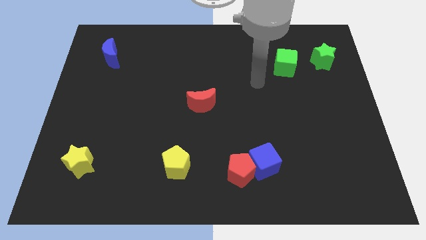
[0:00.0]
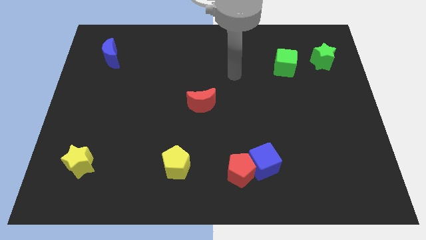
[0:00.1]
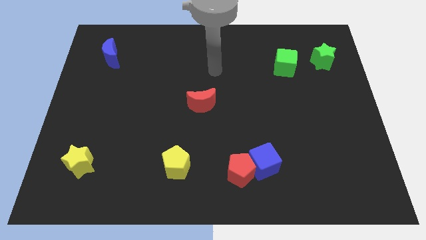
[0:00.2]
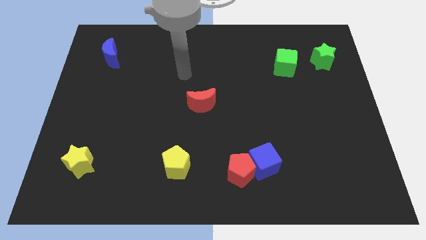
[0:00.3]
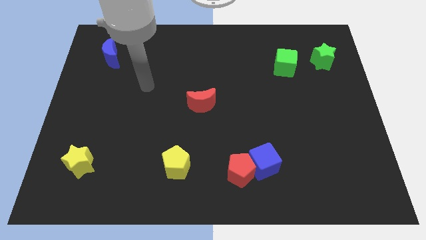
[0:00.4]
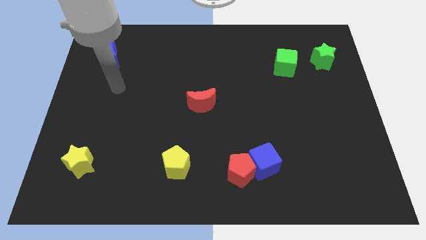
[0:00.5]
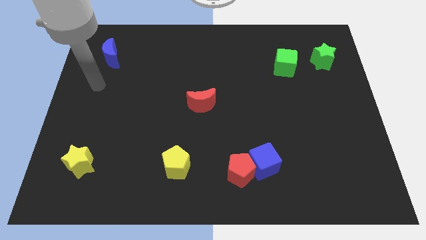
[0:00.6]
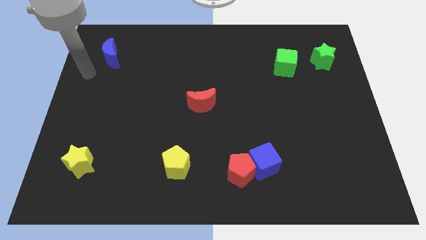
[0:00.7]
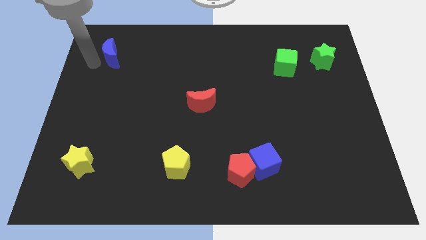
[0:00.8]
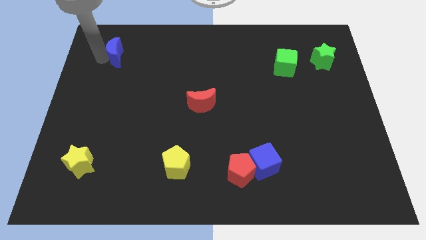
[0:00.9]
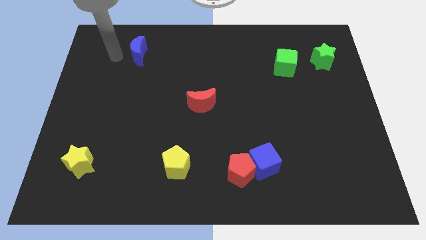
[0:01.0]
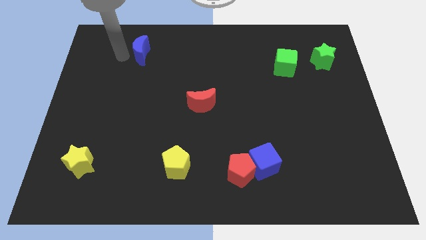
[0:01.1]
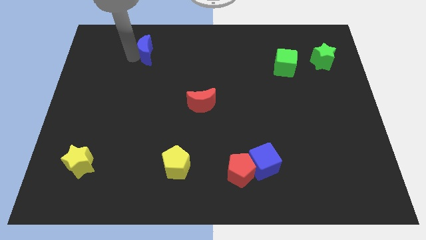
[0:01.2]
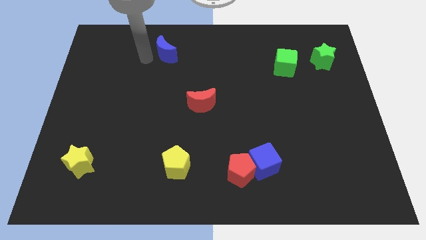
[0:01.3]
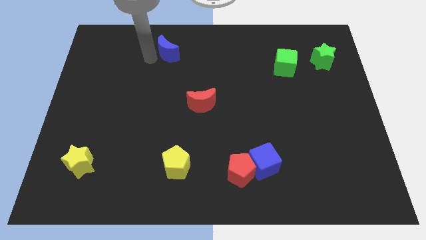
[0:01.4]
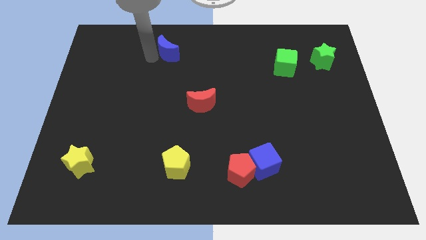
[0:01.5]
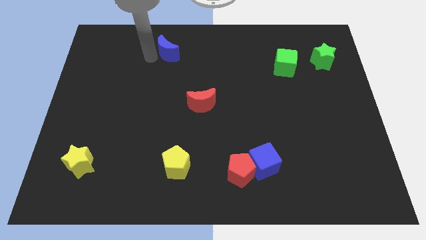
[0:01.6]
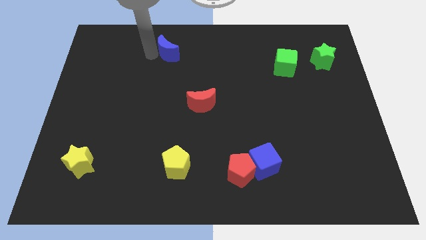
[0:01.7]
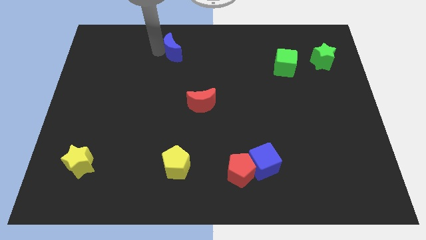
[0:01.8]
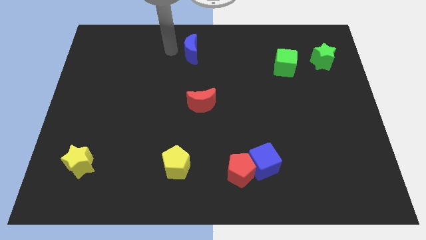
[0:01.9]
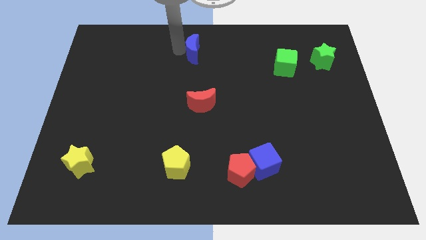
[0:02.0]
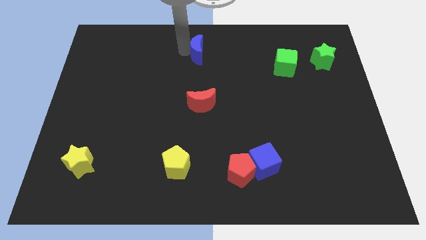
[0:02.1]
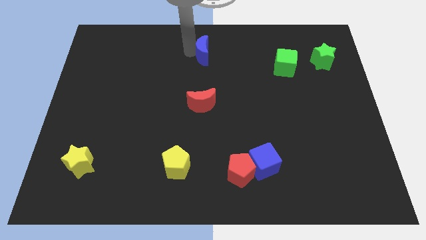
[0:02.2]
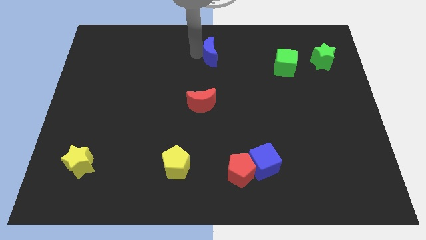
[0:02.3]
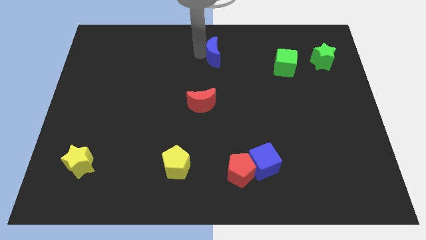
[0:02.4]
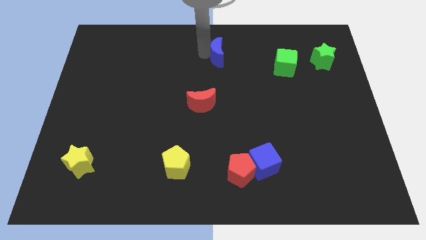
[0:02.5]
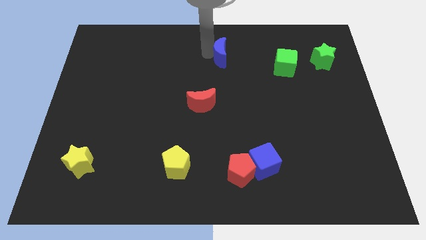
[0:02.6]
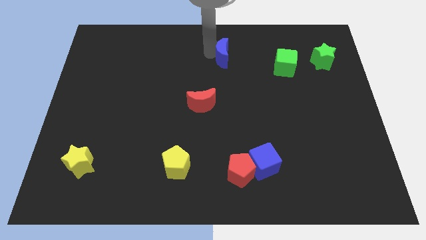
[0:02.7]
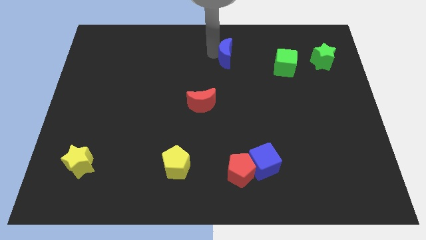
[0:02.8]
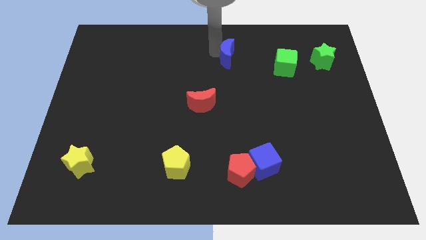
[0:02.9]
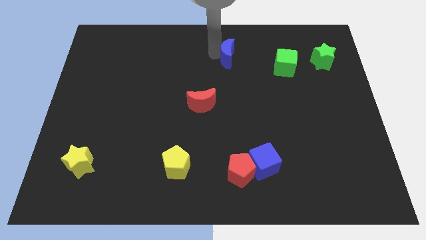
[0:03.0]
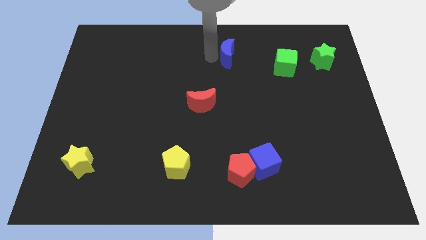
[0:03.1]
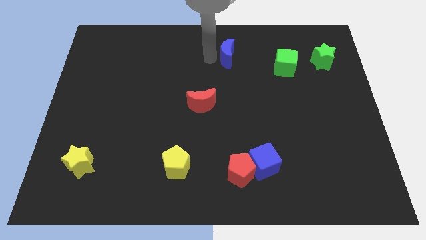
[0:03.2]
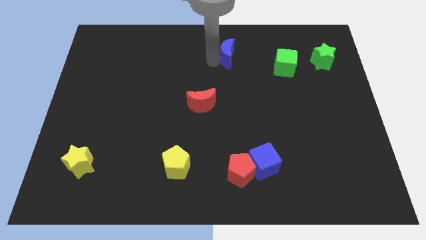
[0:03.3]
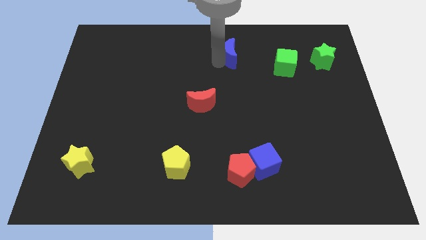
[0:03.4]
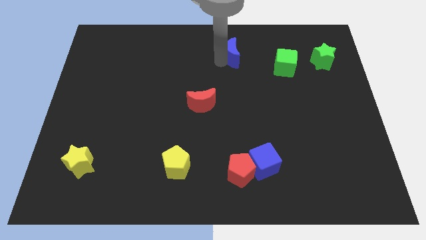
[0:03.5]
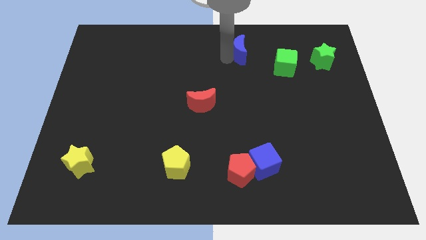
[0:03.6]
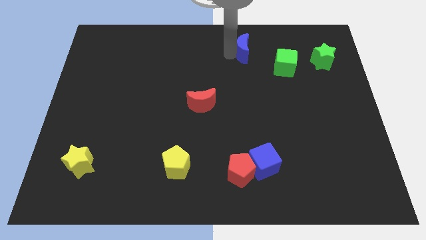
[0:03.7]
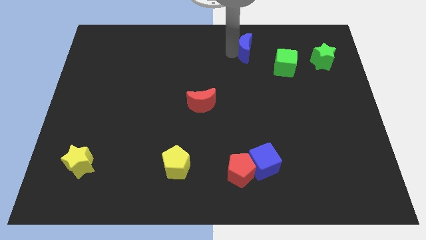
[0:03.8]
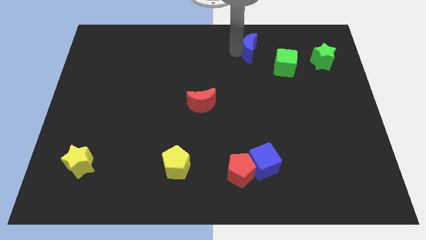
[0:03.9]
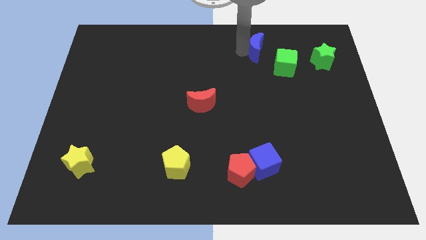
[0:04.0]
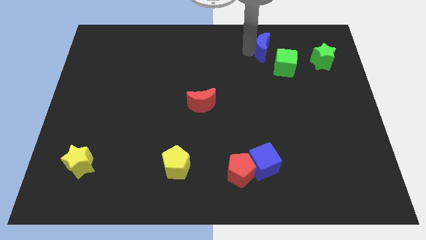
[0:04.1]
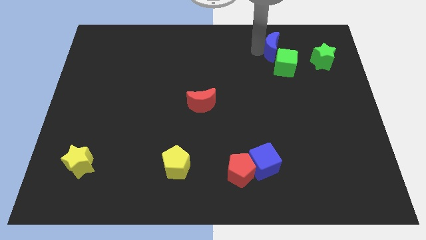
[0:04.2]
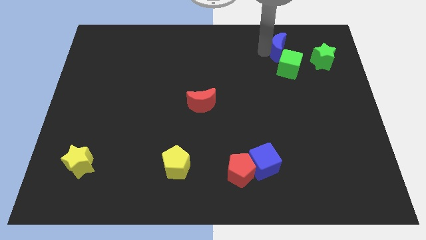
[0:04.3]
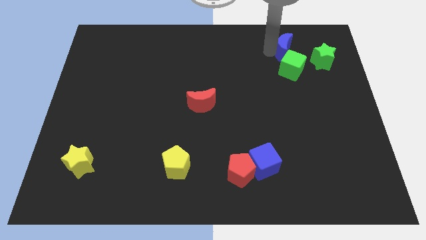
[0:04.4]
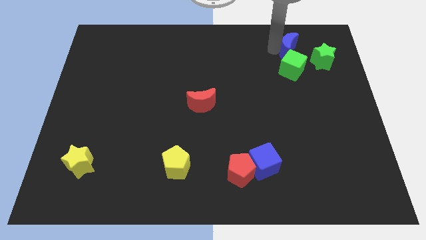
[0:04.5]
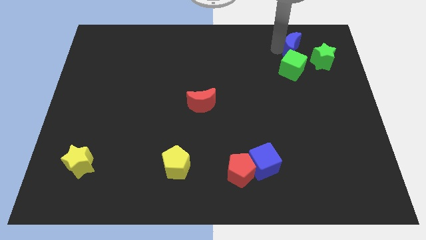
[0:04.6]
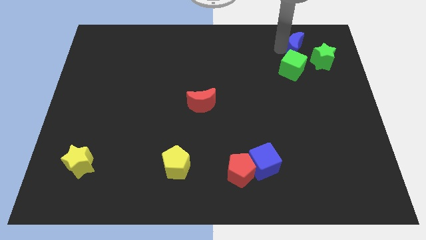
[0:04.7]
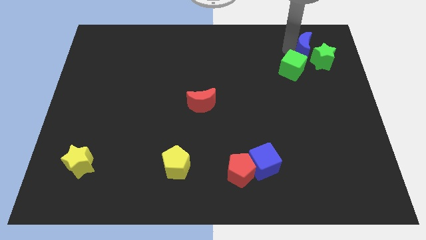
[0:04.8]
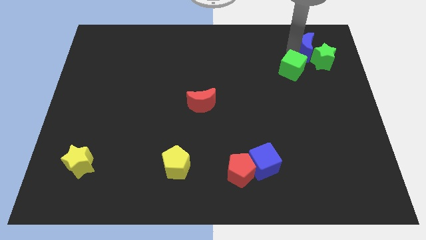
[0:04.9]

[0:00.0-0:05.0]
slide the blue moon close to the green star

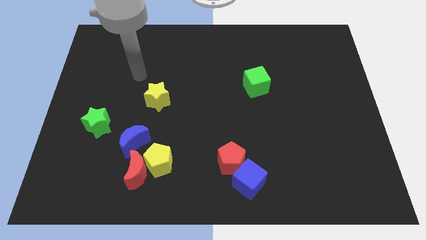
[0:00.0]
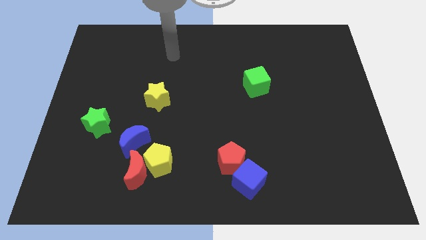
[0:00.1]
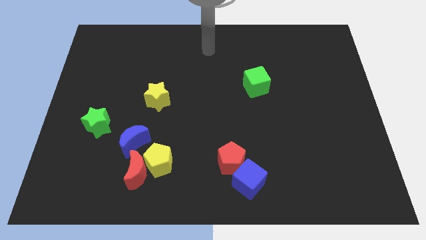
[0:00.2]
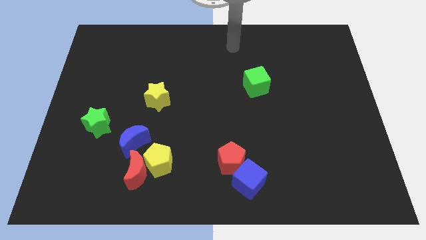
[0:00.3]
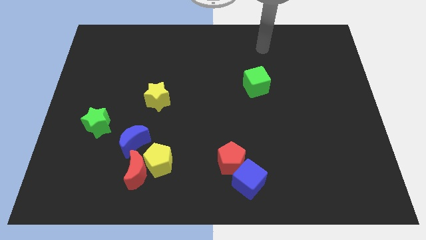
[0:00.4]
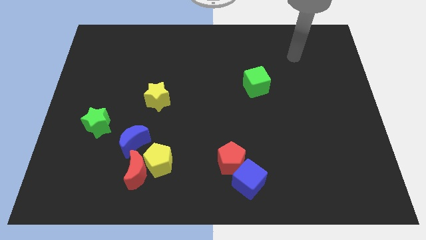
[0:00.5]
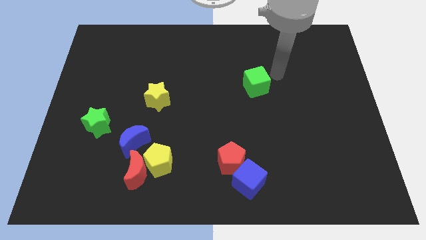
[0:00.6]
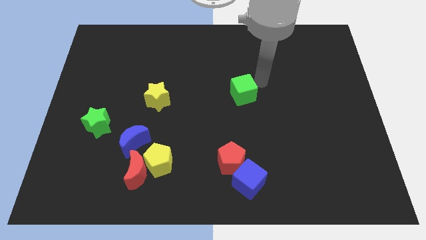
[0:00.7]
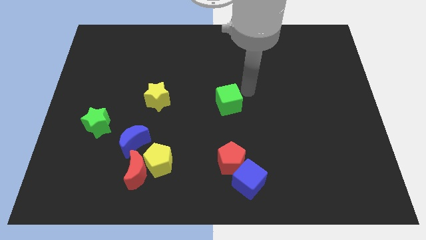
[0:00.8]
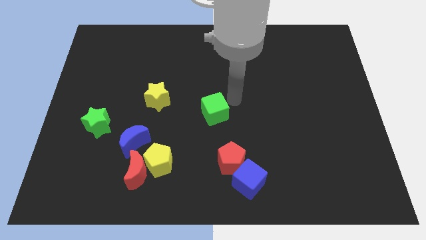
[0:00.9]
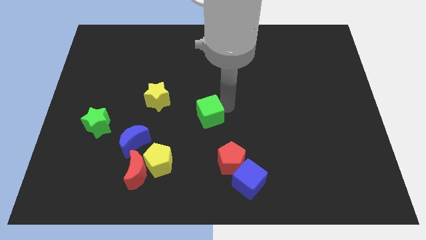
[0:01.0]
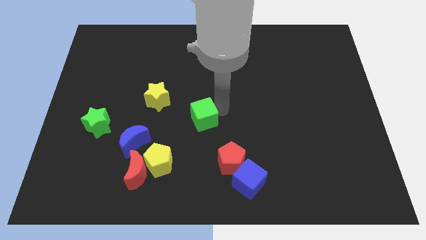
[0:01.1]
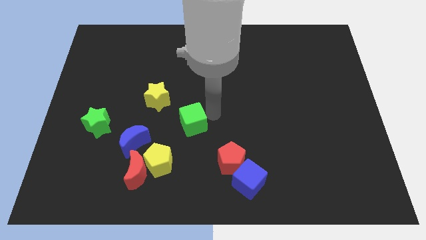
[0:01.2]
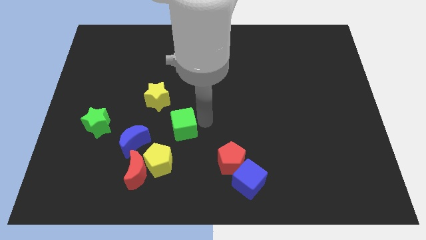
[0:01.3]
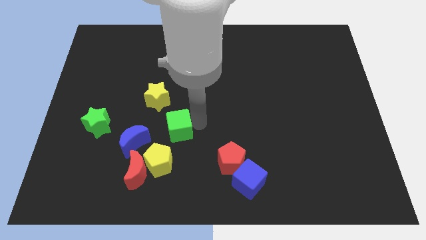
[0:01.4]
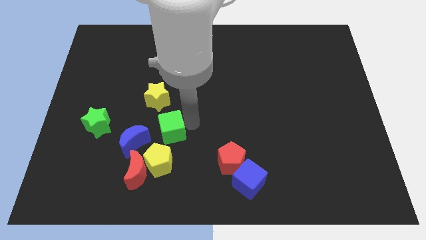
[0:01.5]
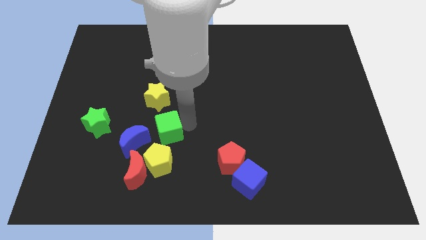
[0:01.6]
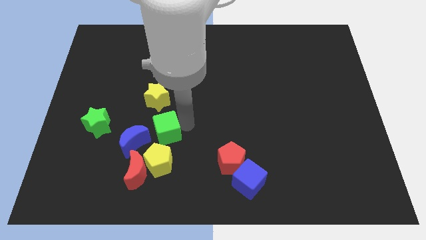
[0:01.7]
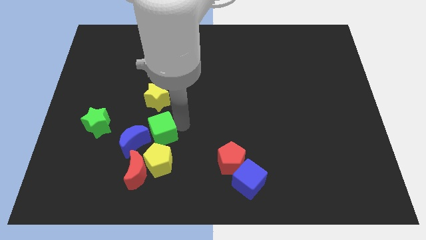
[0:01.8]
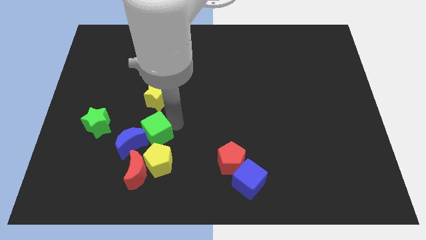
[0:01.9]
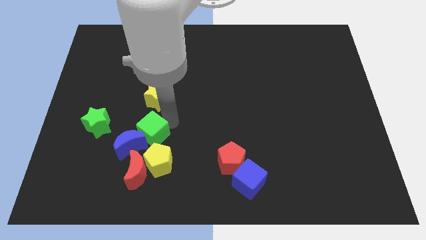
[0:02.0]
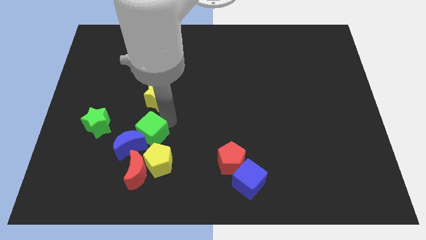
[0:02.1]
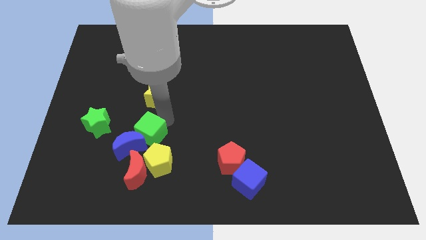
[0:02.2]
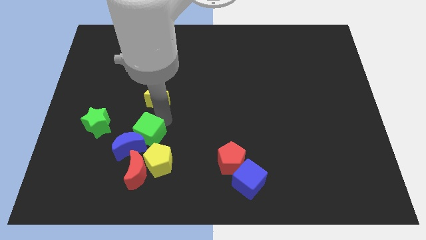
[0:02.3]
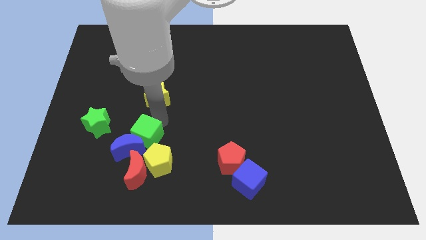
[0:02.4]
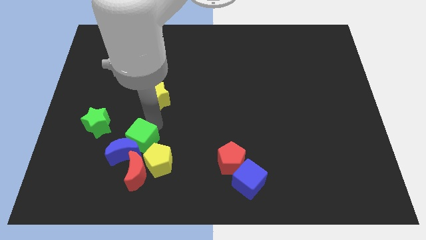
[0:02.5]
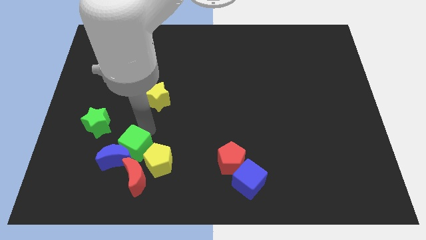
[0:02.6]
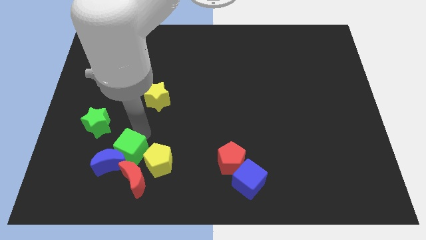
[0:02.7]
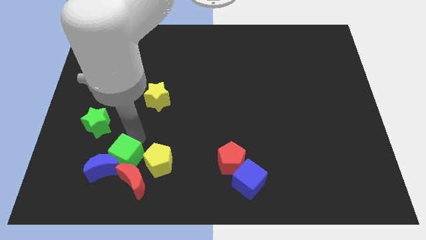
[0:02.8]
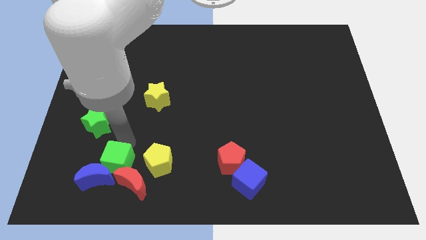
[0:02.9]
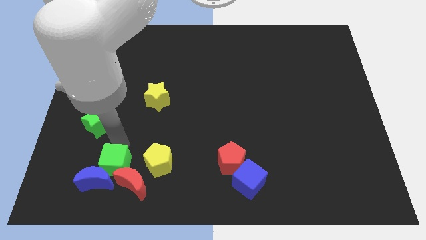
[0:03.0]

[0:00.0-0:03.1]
slide the green cube close to the red moon

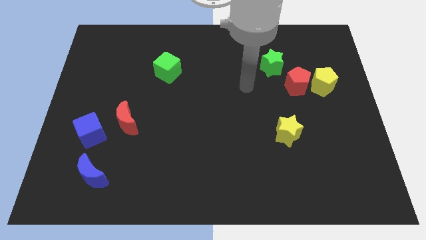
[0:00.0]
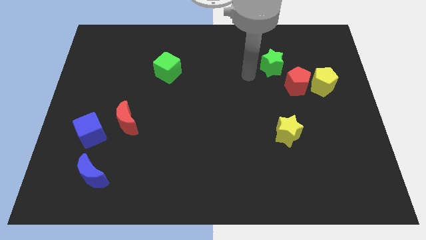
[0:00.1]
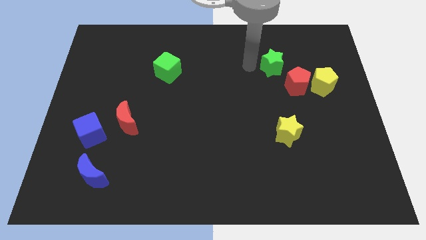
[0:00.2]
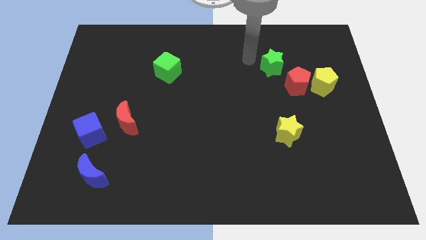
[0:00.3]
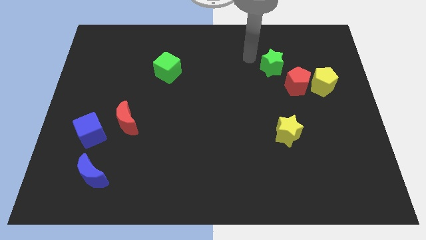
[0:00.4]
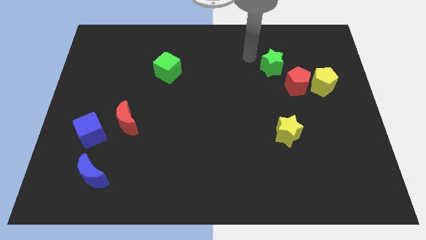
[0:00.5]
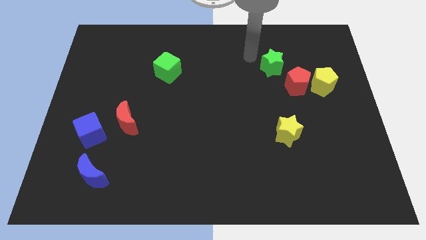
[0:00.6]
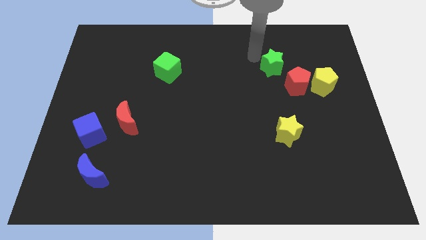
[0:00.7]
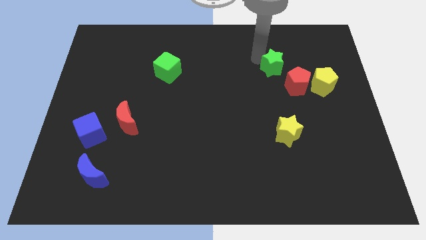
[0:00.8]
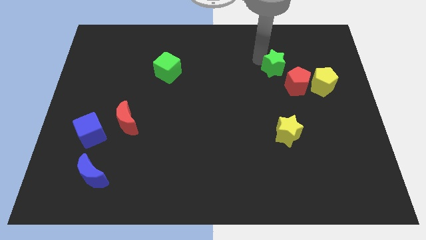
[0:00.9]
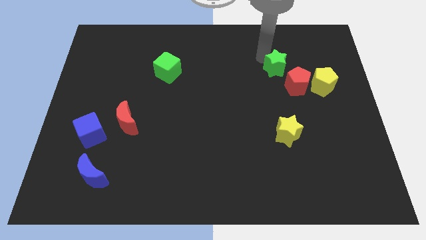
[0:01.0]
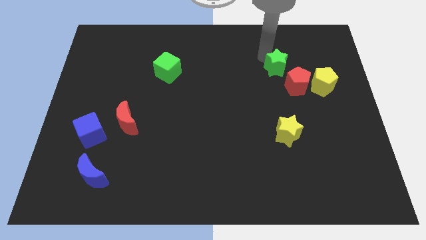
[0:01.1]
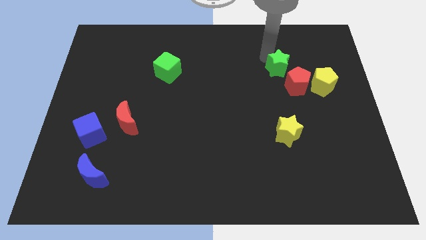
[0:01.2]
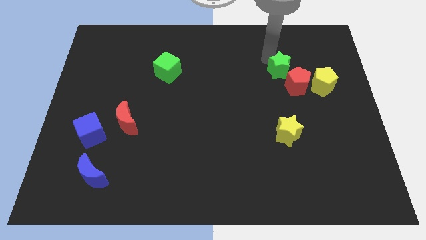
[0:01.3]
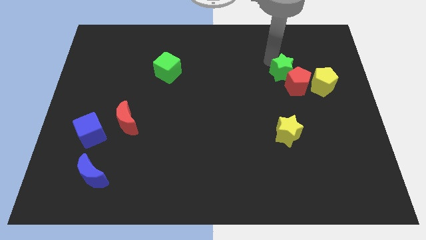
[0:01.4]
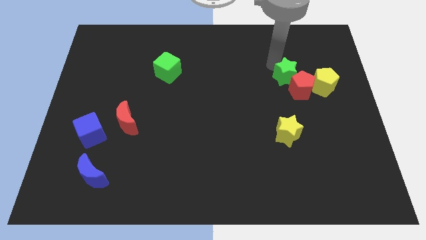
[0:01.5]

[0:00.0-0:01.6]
move the green star to the red pentagon
